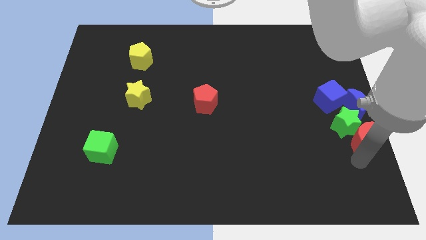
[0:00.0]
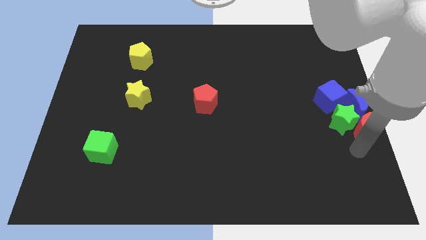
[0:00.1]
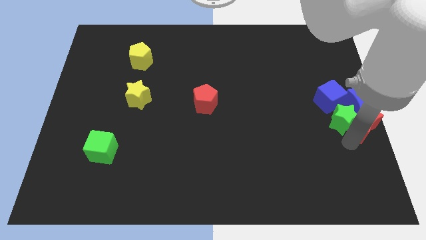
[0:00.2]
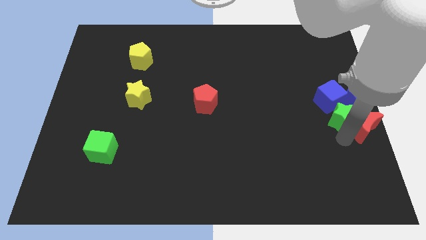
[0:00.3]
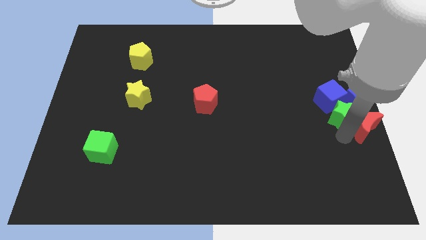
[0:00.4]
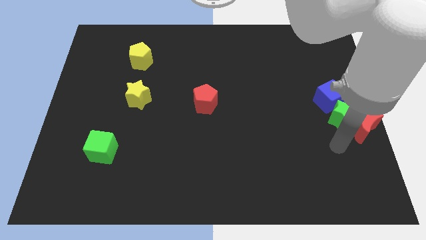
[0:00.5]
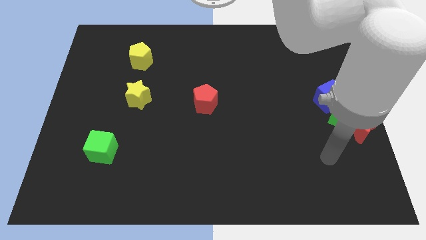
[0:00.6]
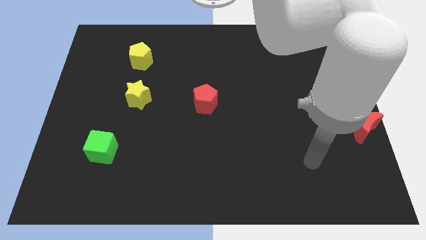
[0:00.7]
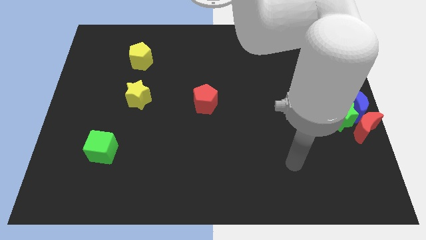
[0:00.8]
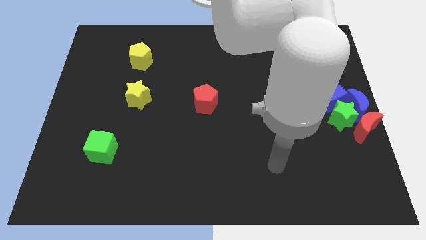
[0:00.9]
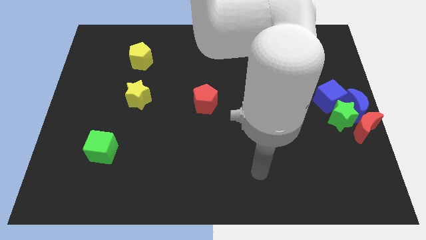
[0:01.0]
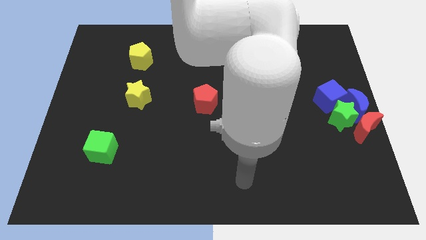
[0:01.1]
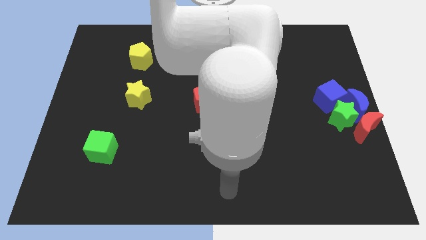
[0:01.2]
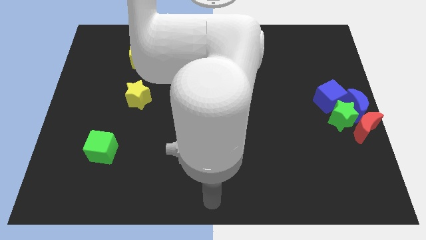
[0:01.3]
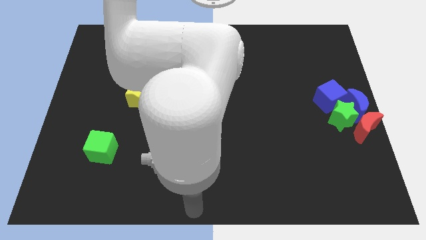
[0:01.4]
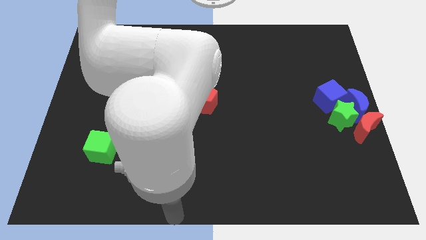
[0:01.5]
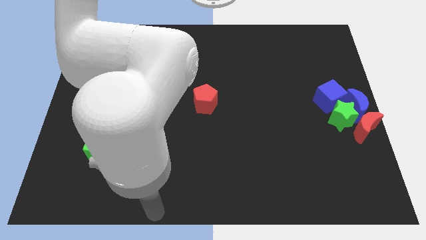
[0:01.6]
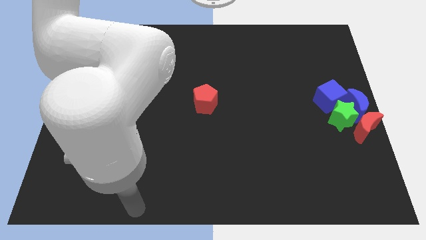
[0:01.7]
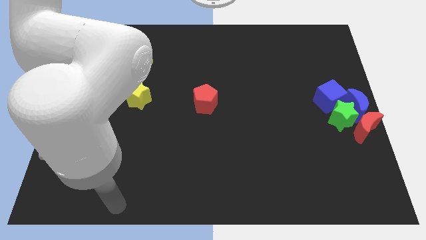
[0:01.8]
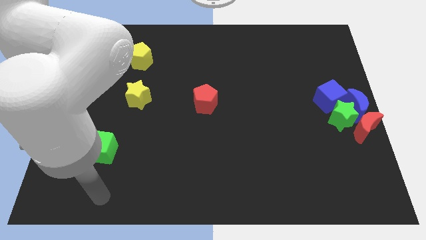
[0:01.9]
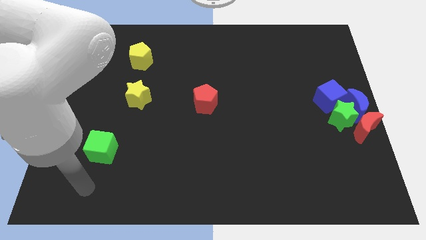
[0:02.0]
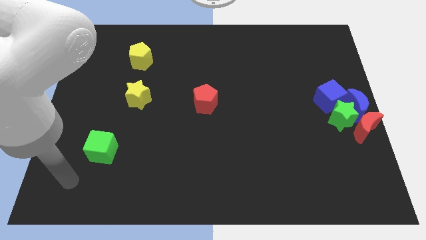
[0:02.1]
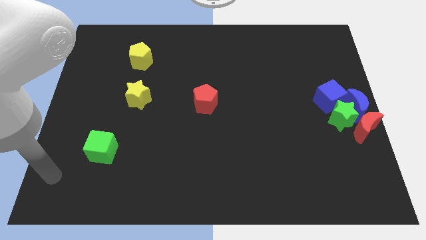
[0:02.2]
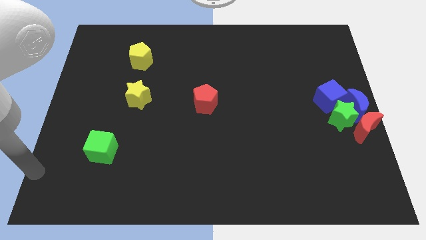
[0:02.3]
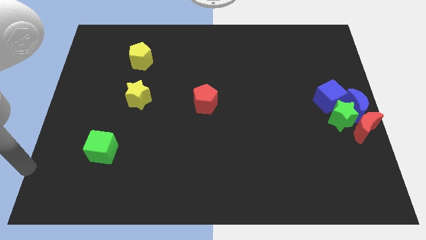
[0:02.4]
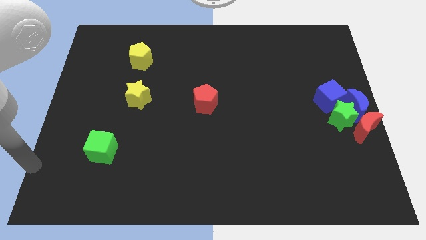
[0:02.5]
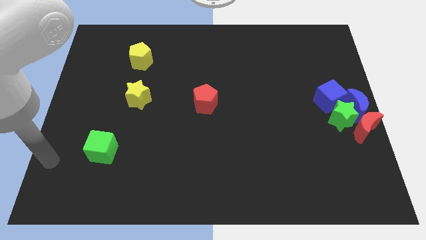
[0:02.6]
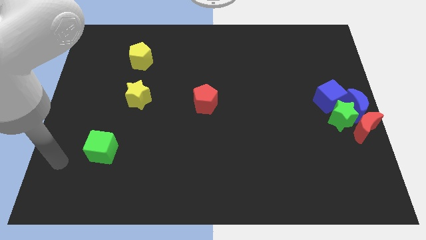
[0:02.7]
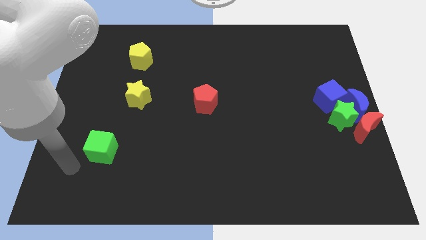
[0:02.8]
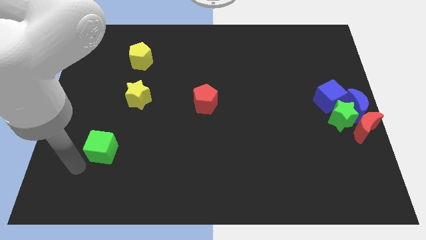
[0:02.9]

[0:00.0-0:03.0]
place your arm to the bottom of the green cube

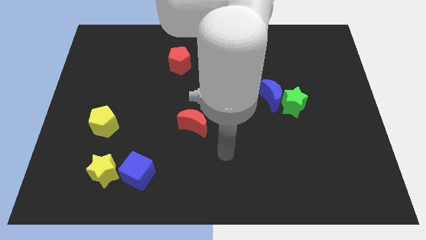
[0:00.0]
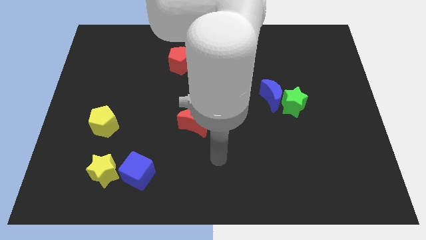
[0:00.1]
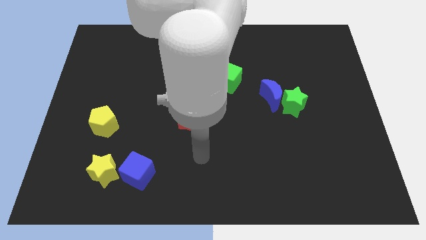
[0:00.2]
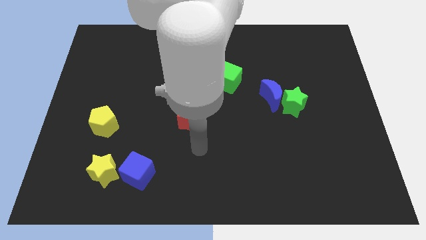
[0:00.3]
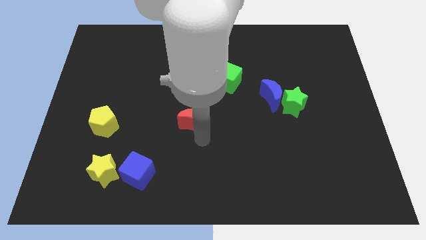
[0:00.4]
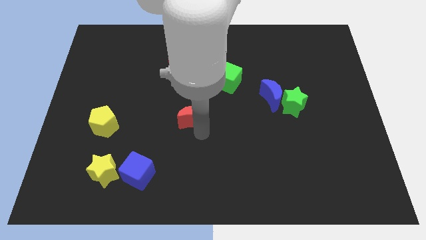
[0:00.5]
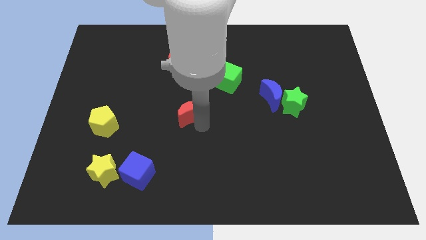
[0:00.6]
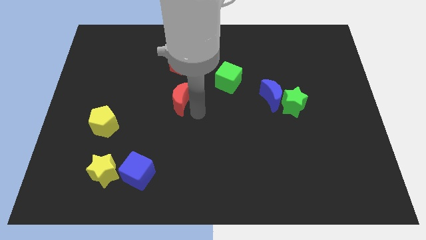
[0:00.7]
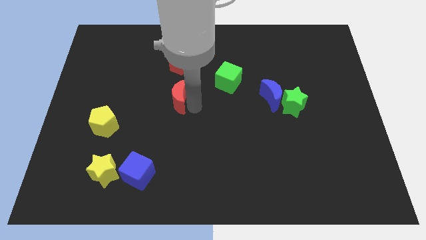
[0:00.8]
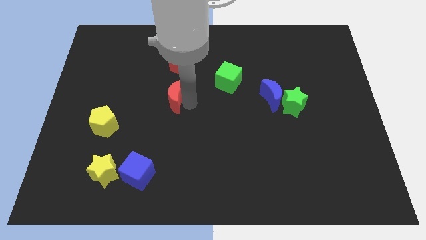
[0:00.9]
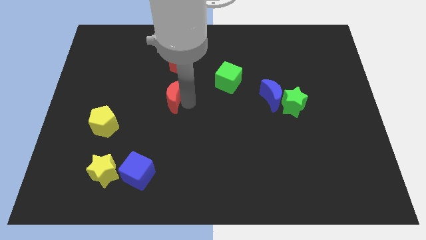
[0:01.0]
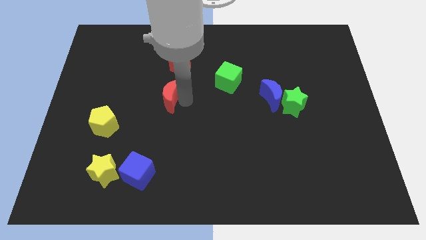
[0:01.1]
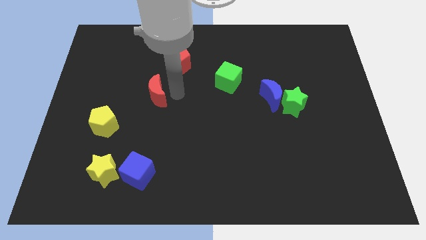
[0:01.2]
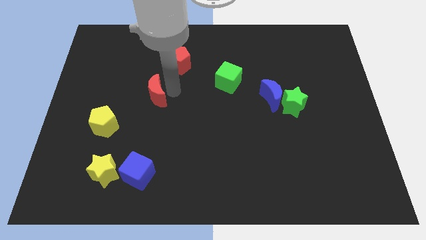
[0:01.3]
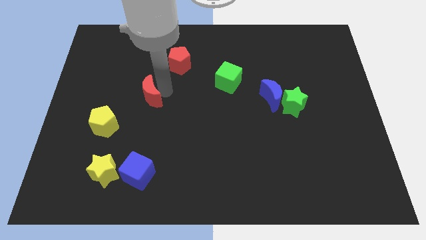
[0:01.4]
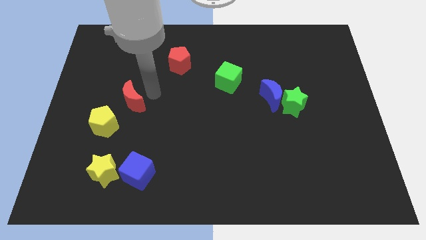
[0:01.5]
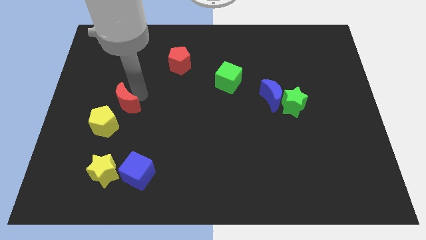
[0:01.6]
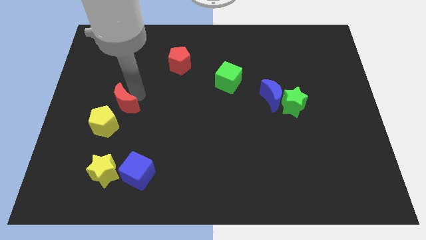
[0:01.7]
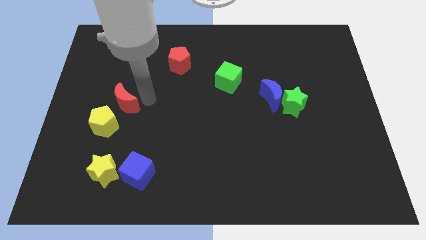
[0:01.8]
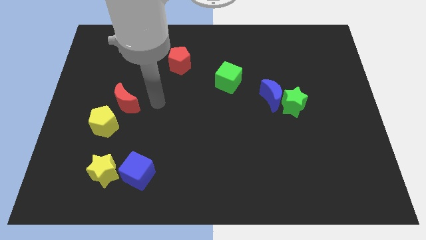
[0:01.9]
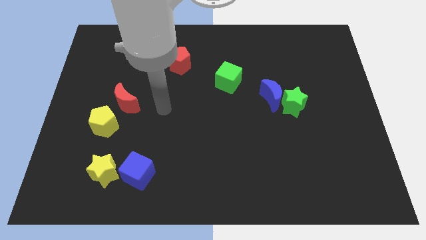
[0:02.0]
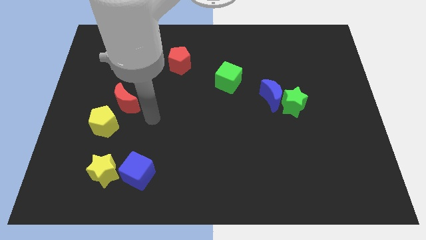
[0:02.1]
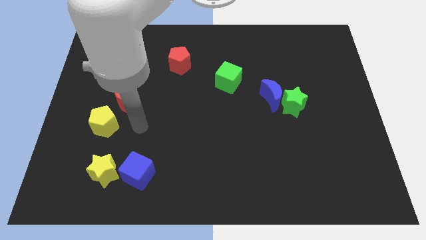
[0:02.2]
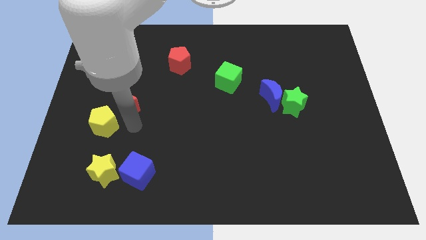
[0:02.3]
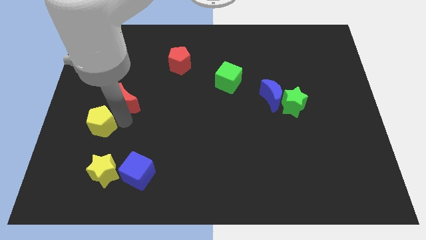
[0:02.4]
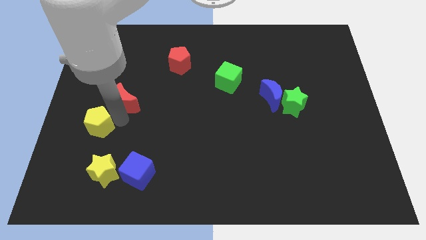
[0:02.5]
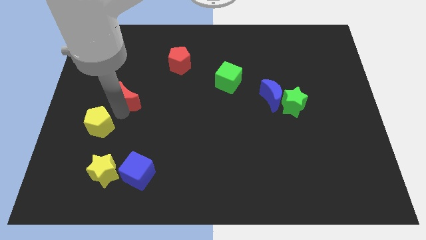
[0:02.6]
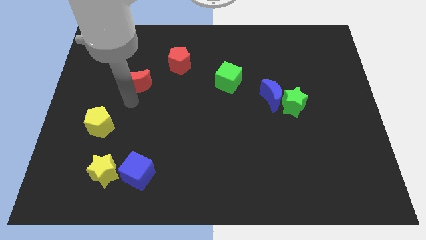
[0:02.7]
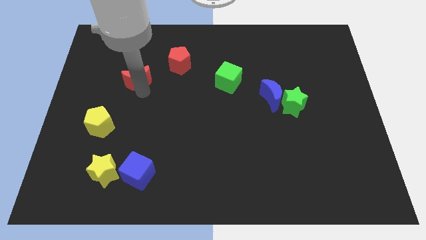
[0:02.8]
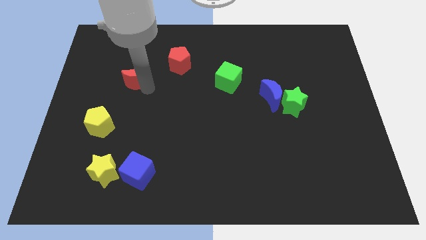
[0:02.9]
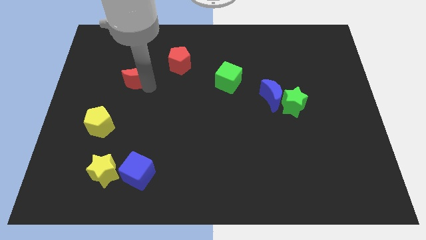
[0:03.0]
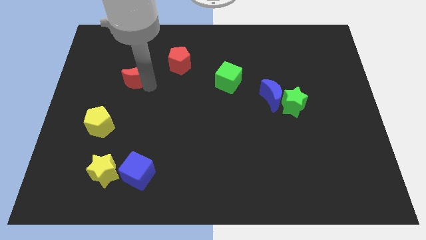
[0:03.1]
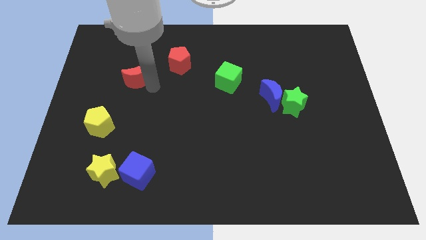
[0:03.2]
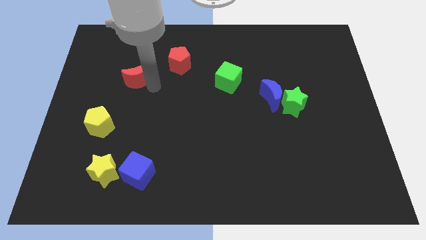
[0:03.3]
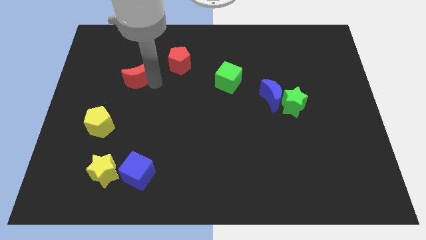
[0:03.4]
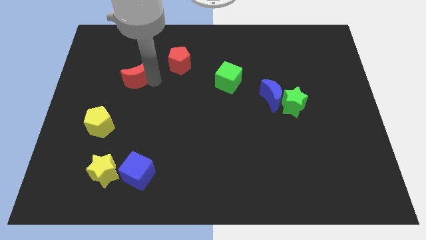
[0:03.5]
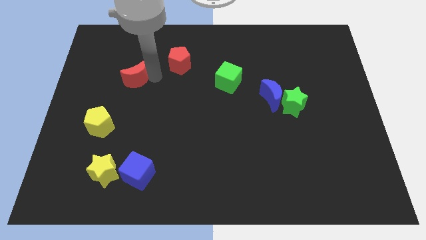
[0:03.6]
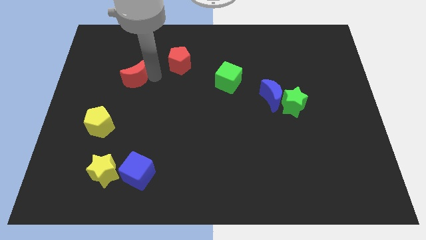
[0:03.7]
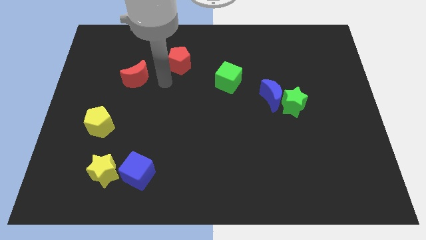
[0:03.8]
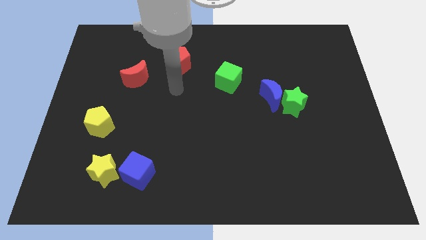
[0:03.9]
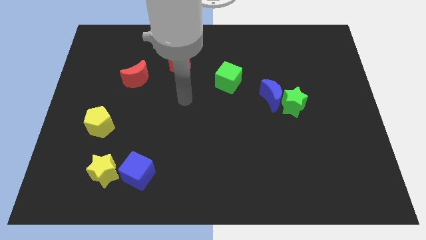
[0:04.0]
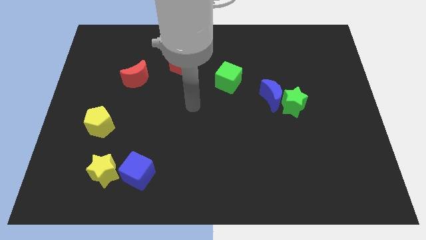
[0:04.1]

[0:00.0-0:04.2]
place the red moon diagonally to the left side of the red pentagon

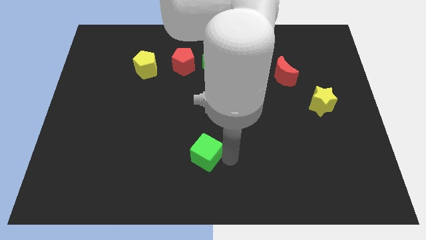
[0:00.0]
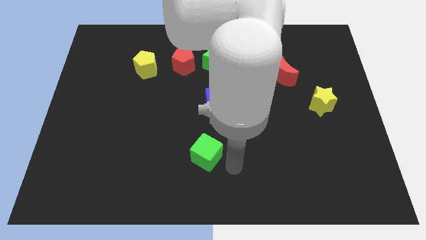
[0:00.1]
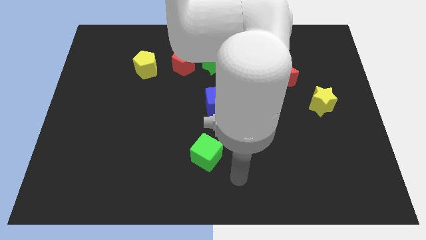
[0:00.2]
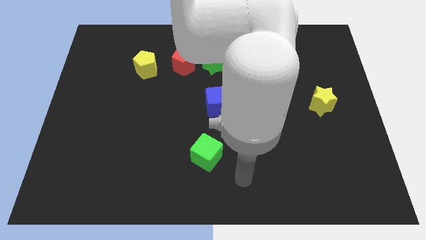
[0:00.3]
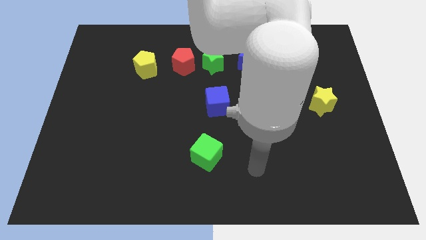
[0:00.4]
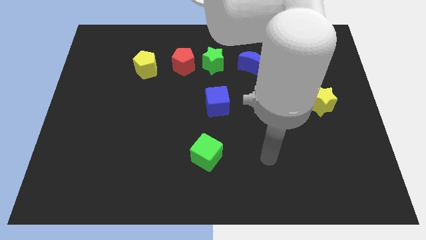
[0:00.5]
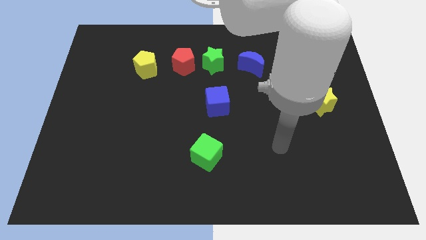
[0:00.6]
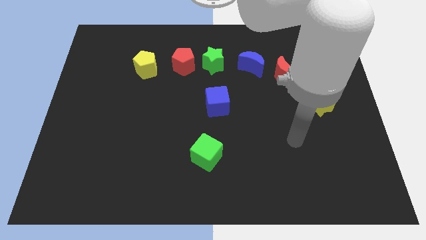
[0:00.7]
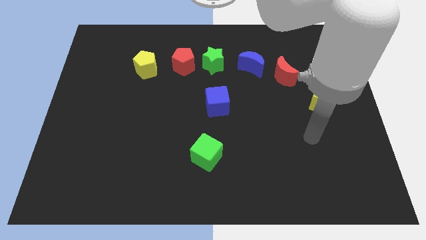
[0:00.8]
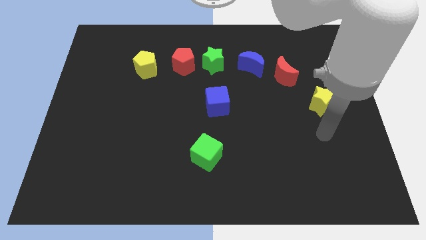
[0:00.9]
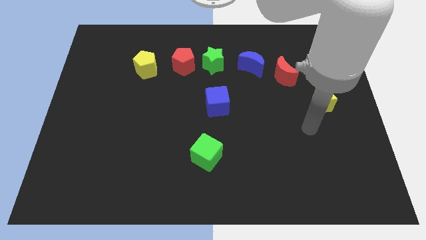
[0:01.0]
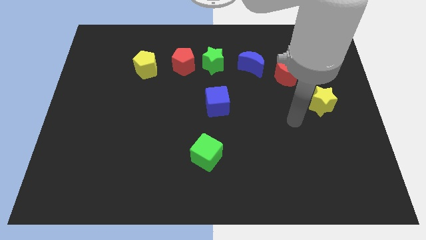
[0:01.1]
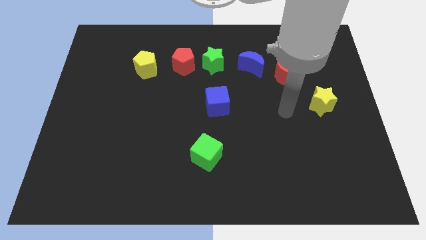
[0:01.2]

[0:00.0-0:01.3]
move your arm and point diagonal to yellow star

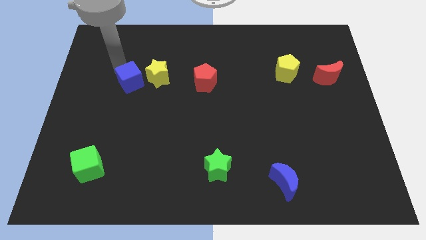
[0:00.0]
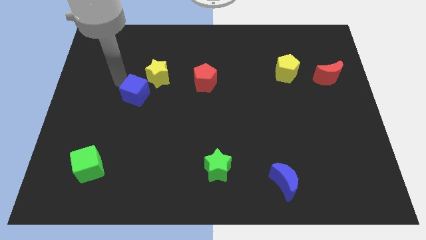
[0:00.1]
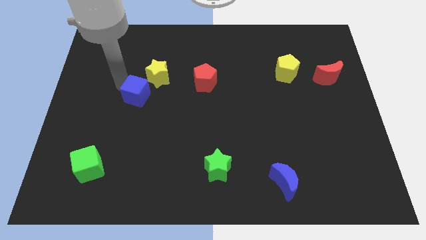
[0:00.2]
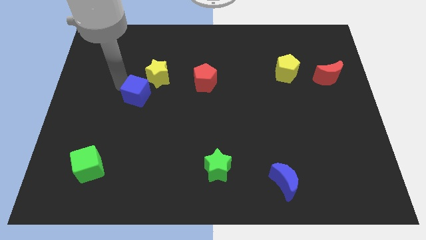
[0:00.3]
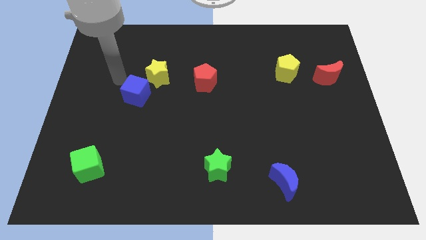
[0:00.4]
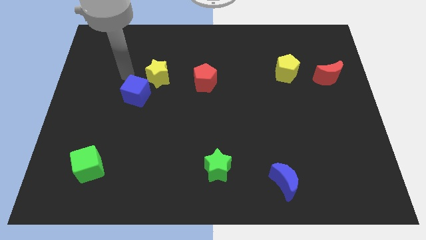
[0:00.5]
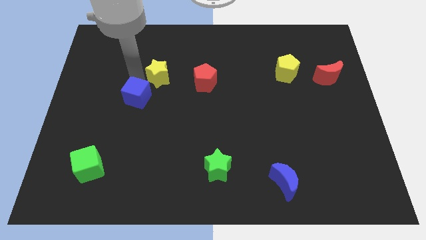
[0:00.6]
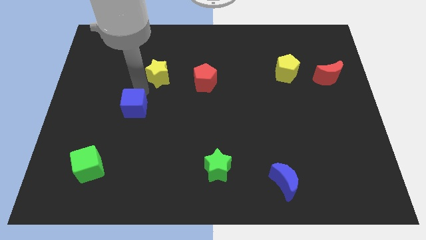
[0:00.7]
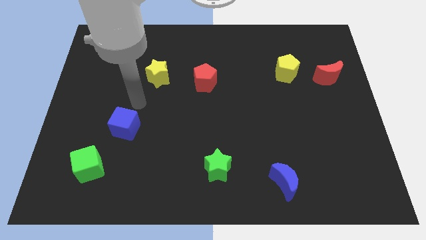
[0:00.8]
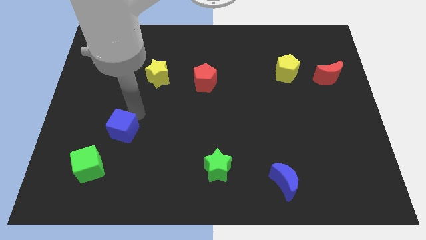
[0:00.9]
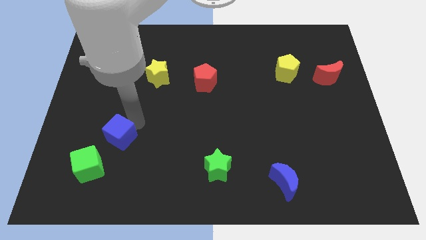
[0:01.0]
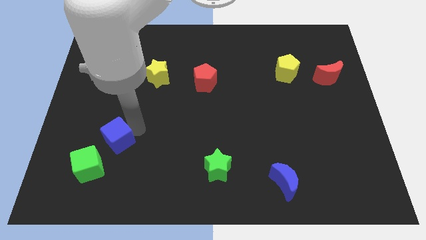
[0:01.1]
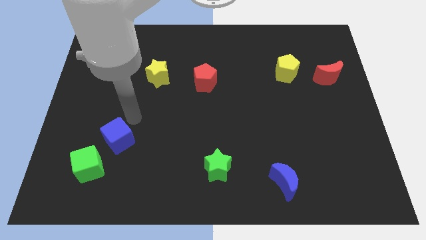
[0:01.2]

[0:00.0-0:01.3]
push the blue cube towards the green cube
